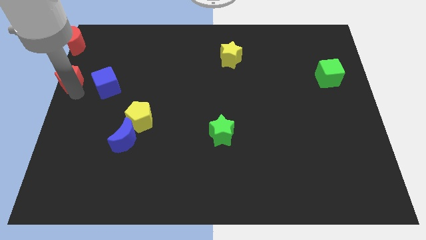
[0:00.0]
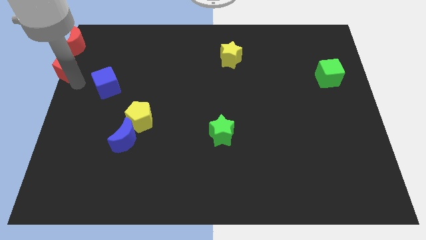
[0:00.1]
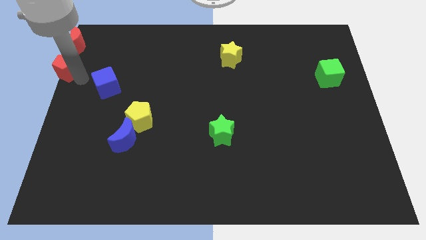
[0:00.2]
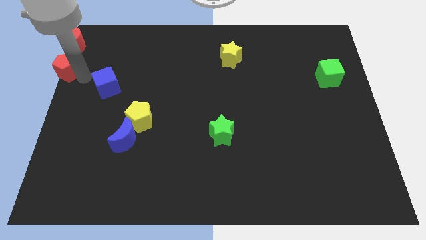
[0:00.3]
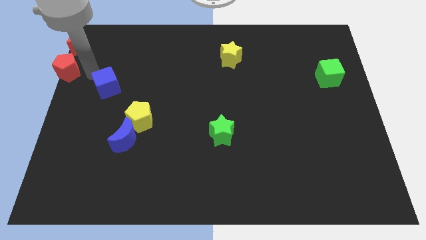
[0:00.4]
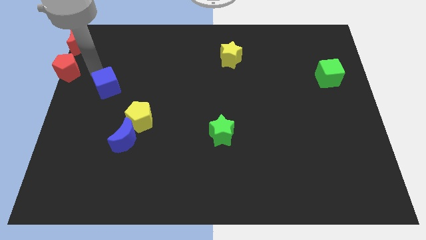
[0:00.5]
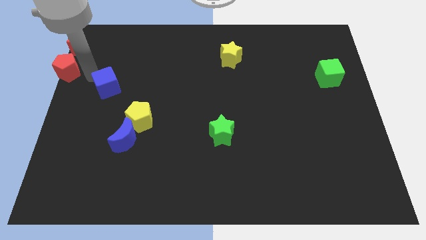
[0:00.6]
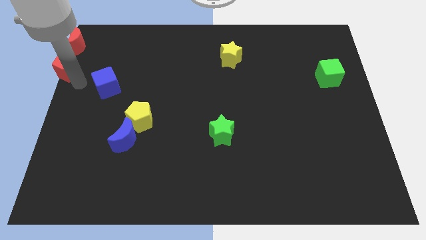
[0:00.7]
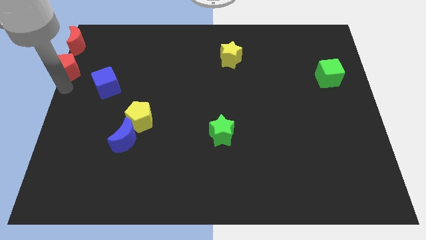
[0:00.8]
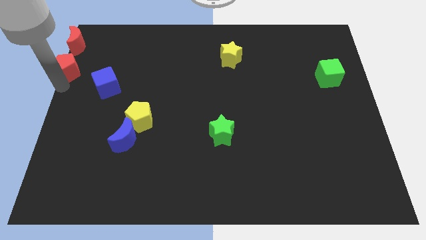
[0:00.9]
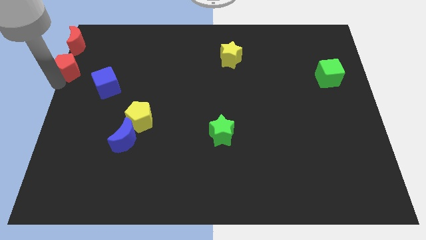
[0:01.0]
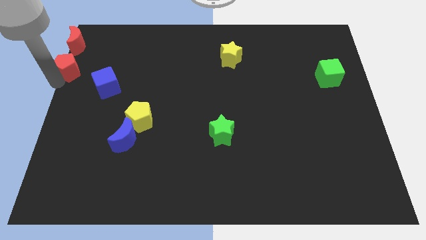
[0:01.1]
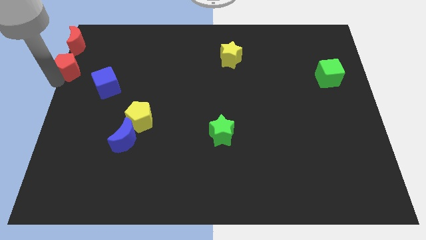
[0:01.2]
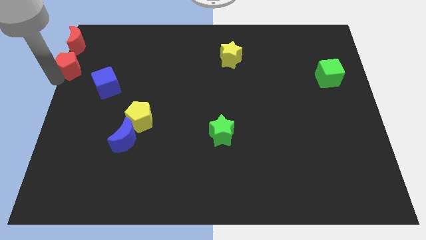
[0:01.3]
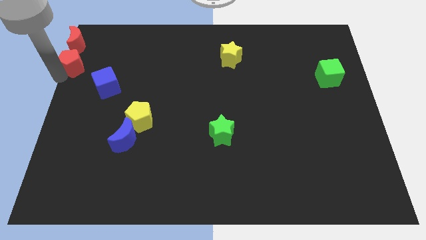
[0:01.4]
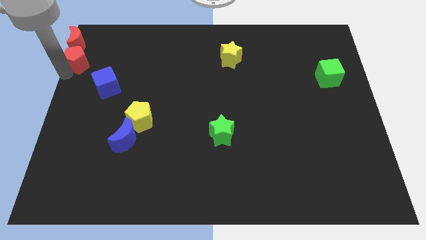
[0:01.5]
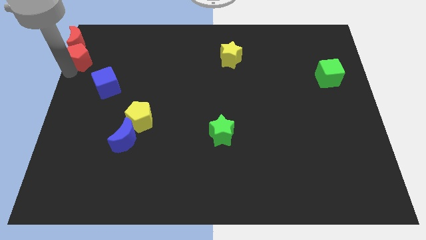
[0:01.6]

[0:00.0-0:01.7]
place the red pentagon to the bottom of the red moon

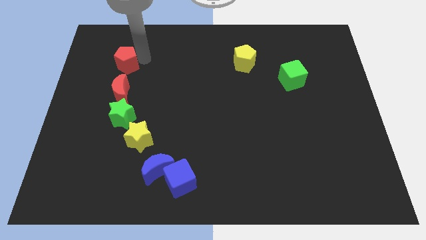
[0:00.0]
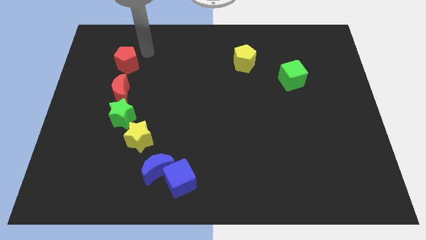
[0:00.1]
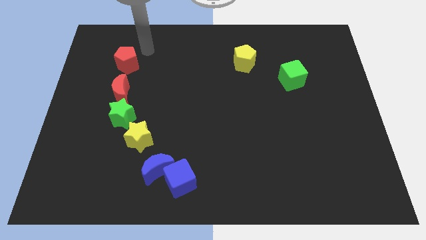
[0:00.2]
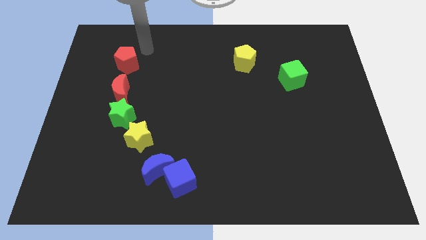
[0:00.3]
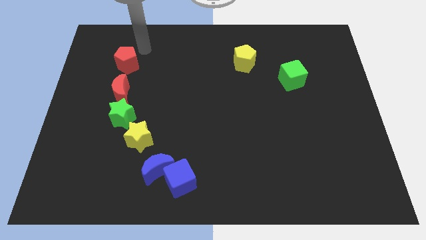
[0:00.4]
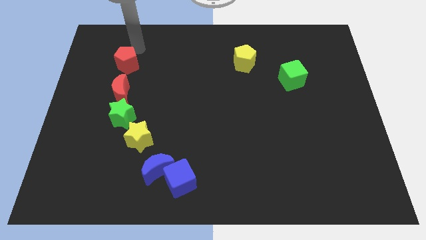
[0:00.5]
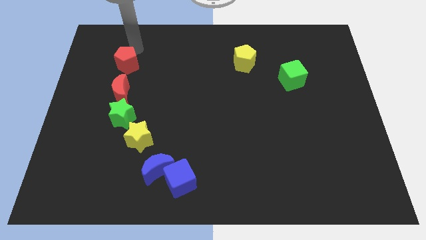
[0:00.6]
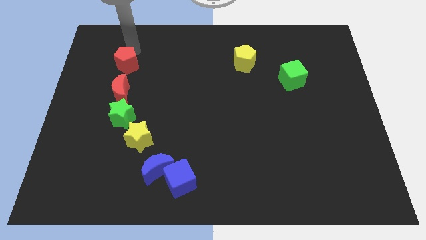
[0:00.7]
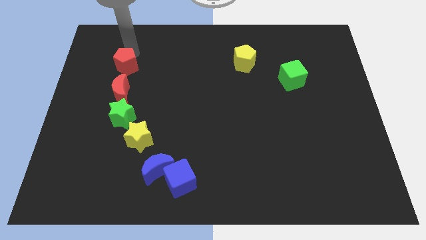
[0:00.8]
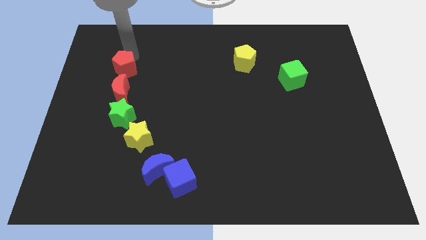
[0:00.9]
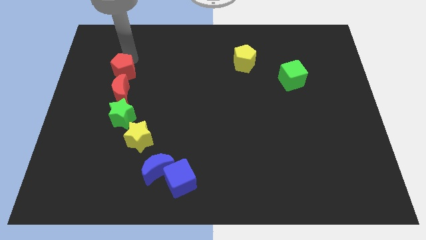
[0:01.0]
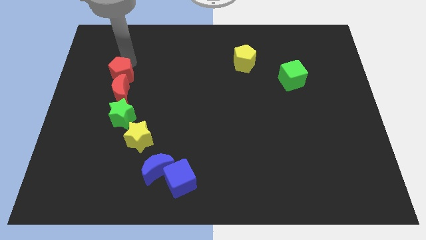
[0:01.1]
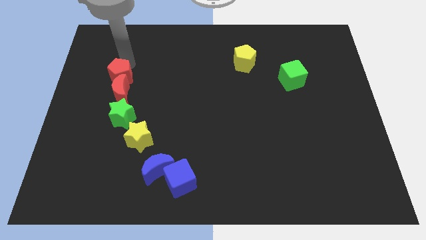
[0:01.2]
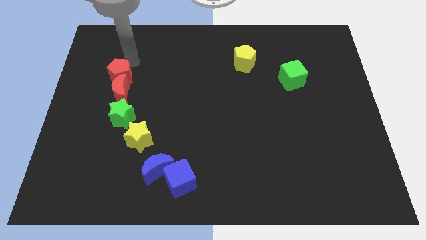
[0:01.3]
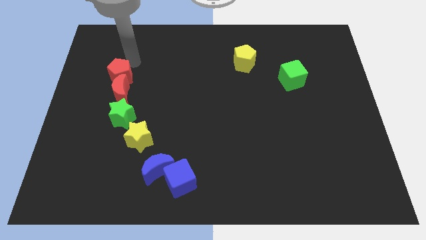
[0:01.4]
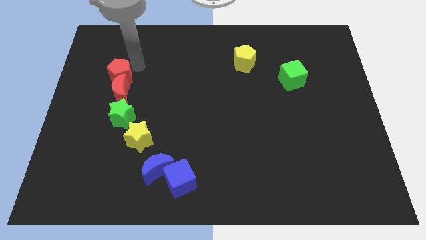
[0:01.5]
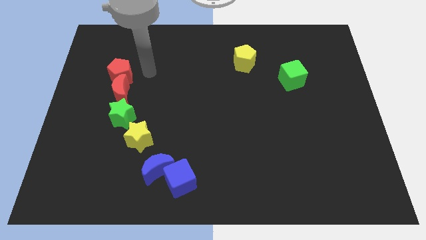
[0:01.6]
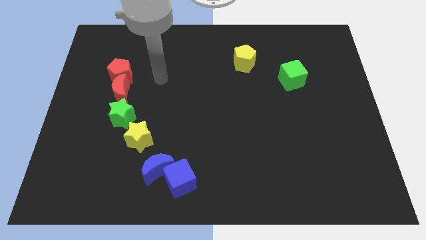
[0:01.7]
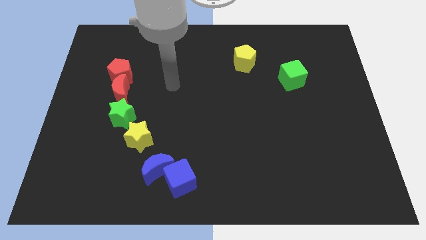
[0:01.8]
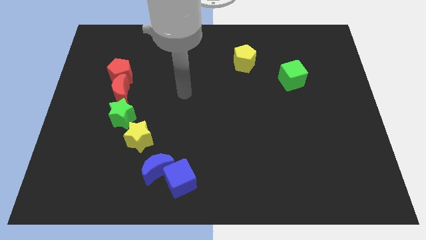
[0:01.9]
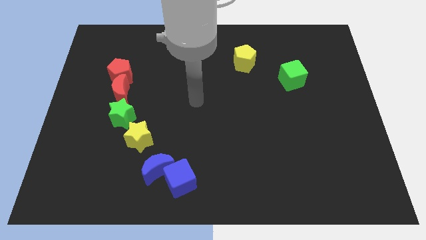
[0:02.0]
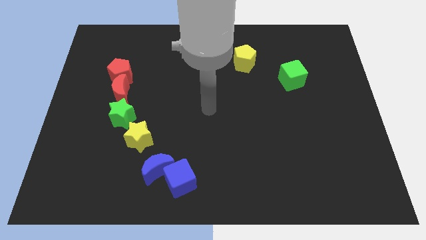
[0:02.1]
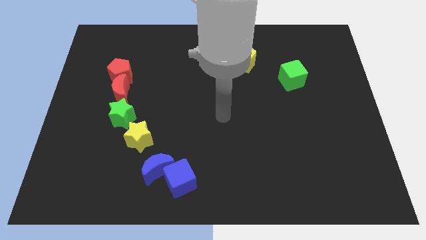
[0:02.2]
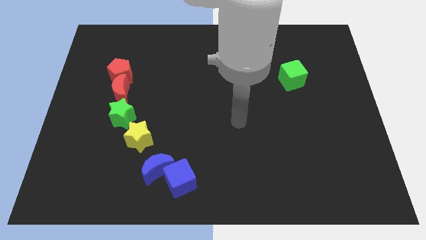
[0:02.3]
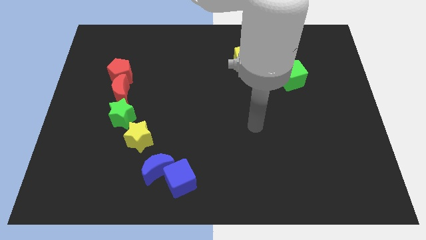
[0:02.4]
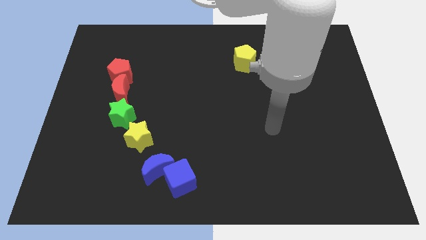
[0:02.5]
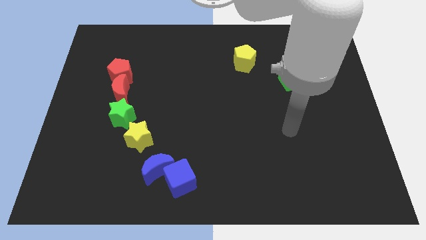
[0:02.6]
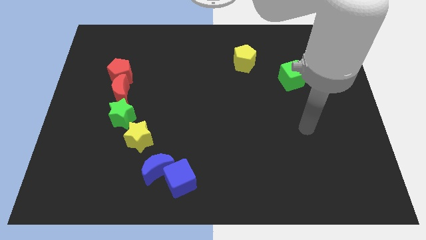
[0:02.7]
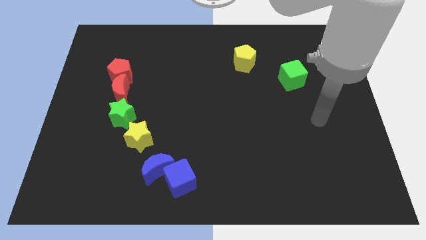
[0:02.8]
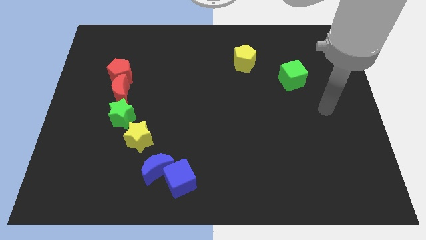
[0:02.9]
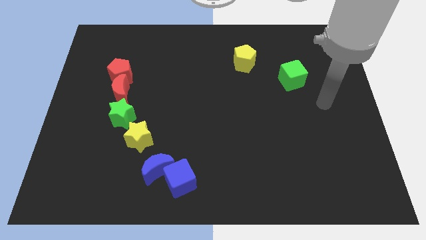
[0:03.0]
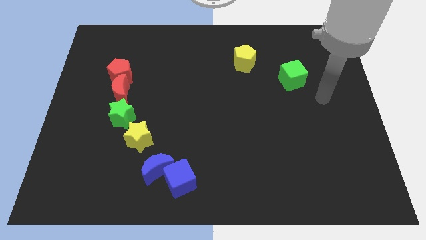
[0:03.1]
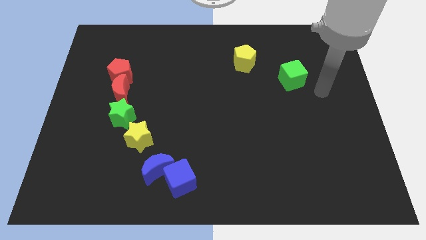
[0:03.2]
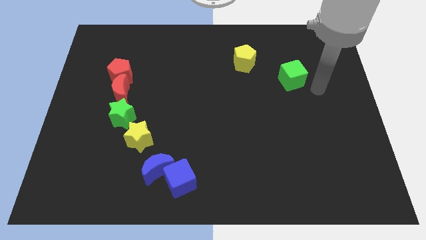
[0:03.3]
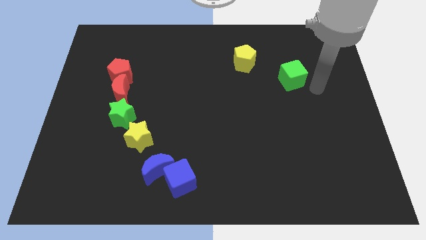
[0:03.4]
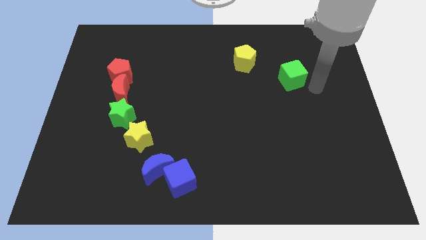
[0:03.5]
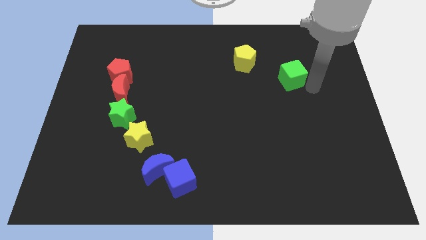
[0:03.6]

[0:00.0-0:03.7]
push the red pentagon into the red crescent from the top

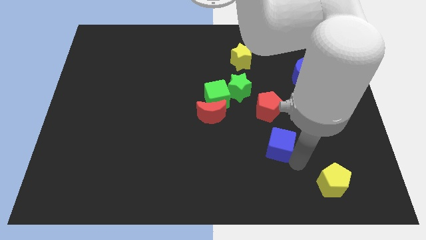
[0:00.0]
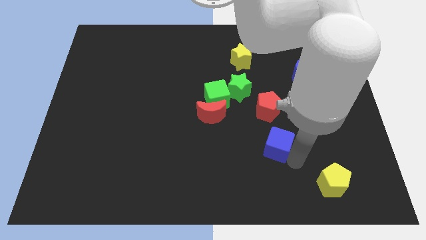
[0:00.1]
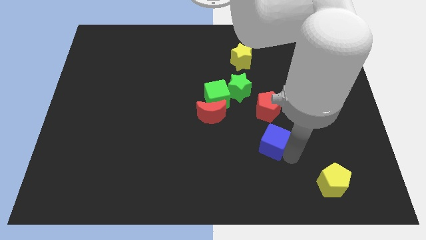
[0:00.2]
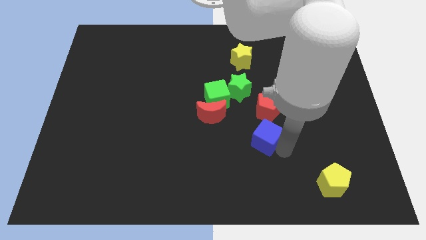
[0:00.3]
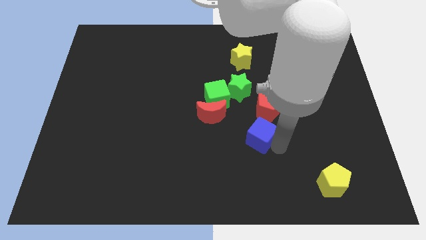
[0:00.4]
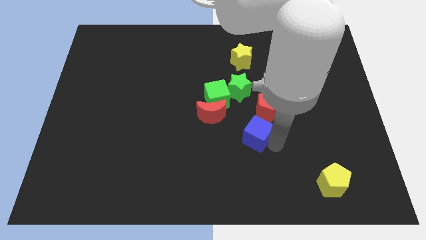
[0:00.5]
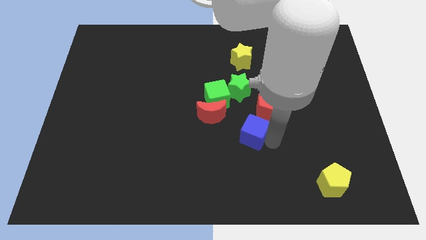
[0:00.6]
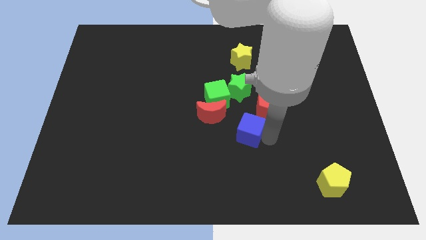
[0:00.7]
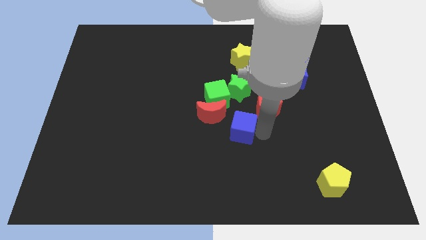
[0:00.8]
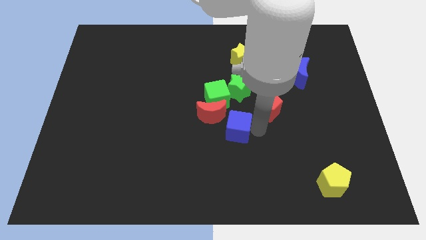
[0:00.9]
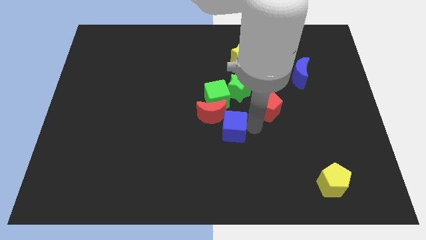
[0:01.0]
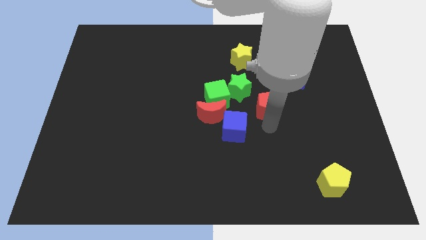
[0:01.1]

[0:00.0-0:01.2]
move the blue cube towards the red crescent

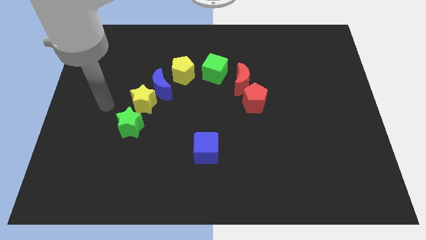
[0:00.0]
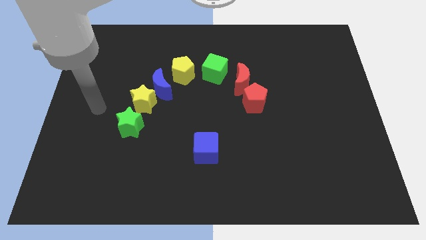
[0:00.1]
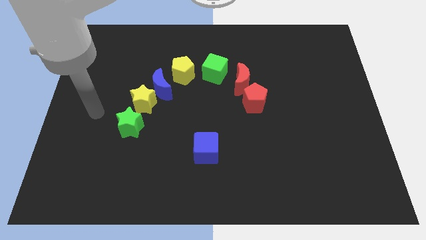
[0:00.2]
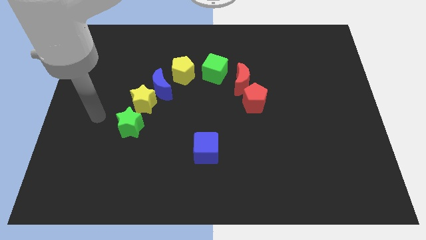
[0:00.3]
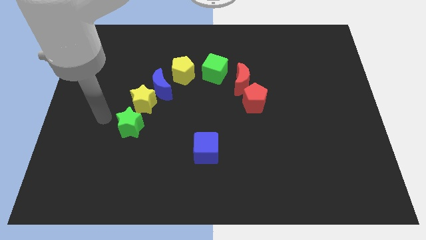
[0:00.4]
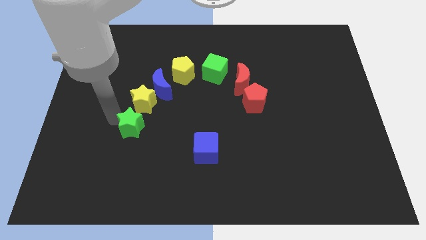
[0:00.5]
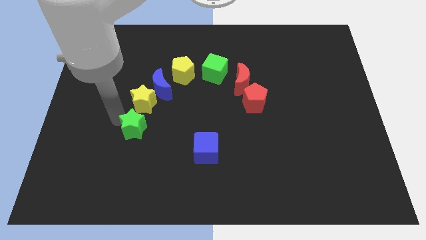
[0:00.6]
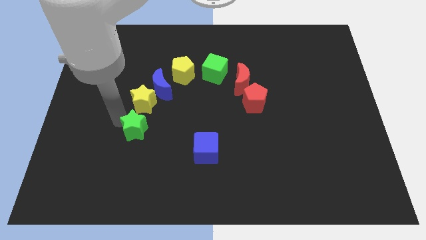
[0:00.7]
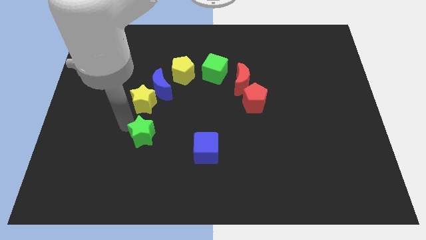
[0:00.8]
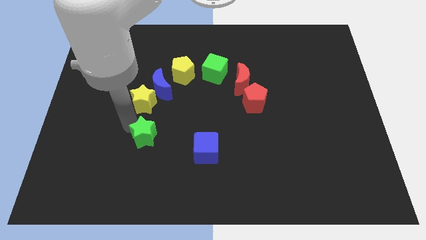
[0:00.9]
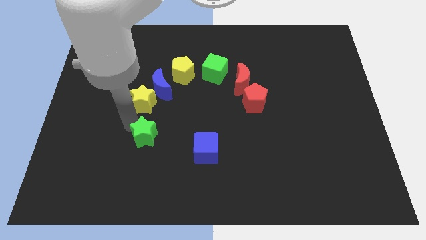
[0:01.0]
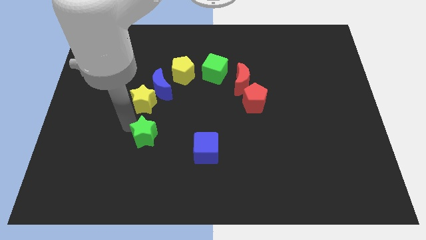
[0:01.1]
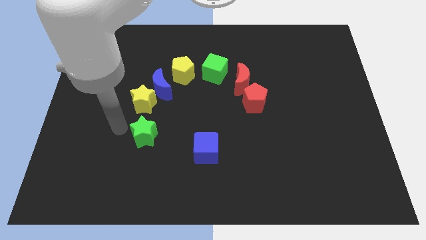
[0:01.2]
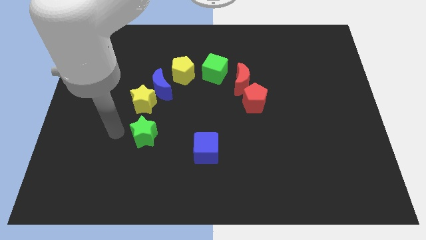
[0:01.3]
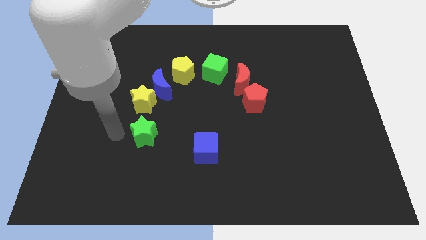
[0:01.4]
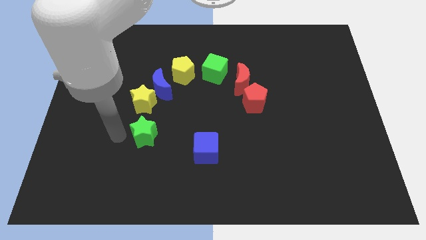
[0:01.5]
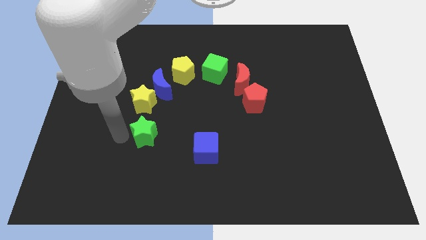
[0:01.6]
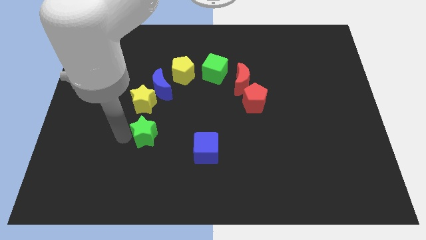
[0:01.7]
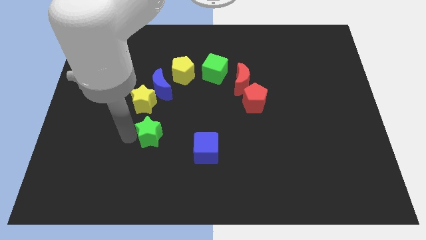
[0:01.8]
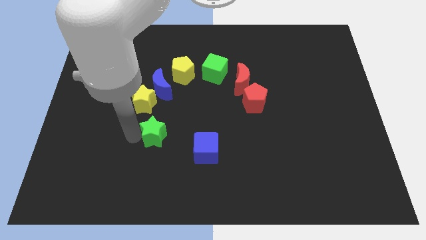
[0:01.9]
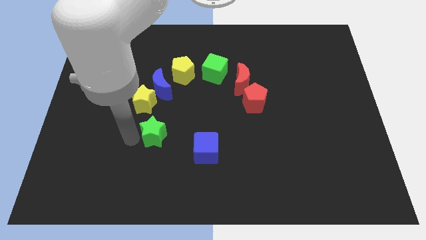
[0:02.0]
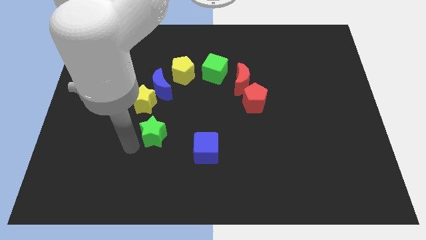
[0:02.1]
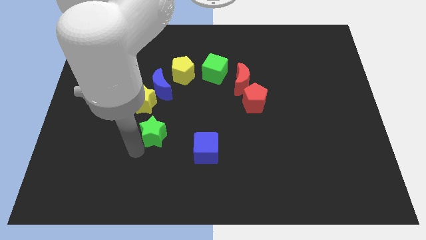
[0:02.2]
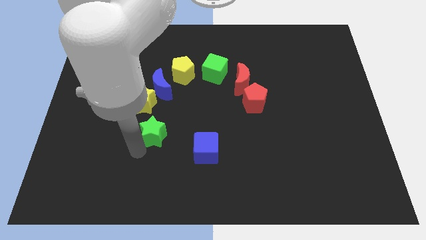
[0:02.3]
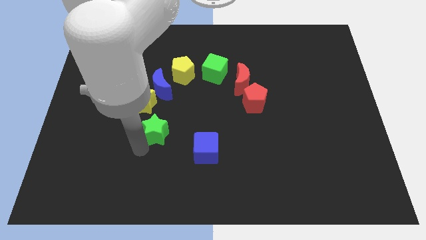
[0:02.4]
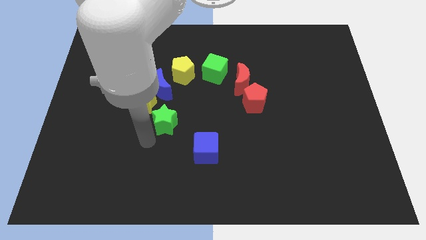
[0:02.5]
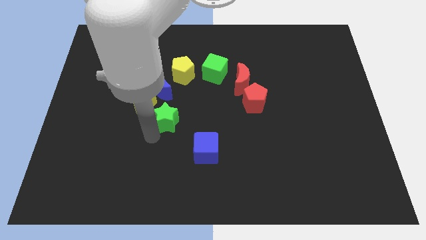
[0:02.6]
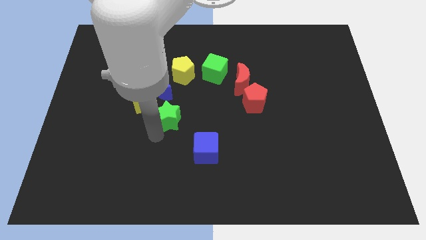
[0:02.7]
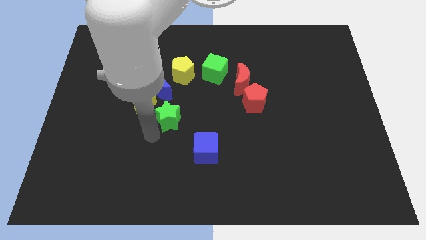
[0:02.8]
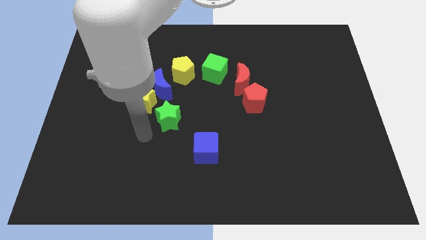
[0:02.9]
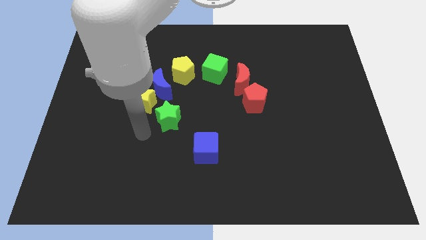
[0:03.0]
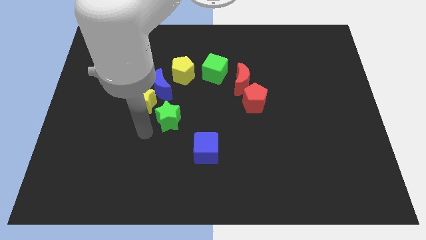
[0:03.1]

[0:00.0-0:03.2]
push green star diagonal to blue cube
